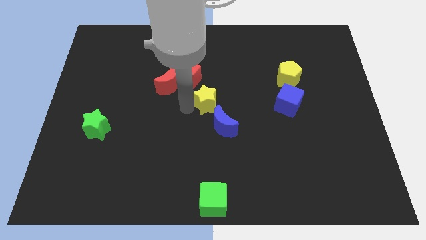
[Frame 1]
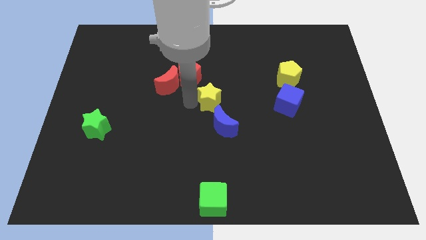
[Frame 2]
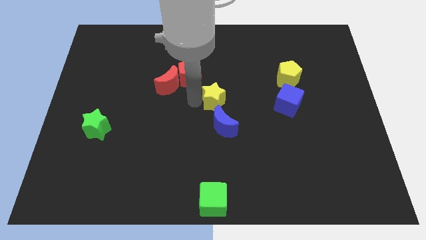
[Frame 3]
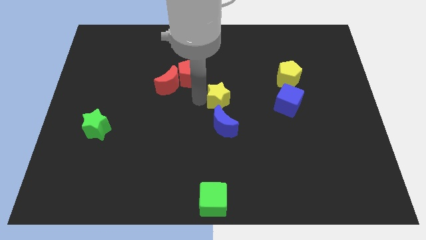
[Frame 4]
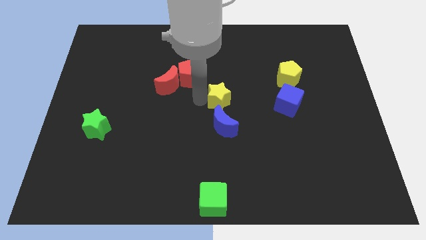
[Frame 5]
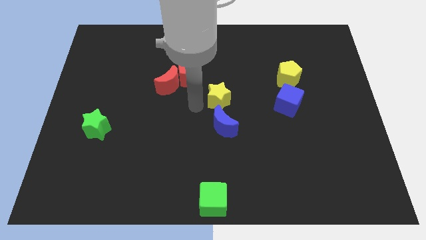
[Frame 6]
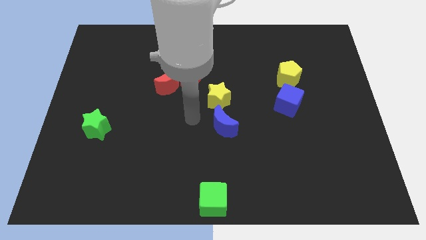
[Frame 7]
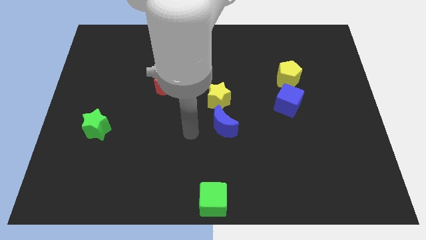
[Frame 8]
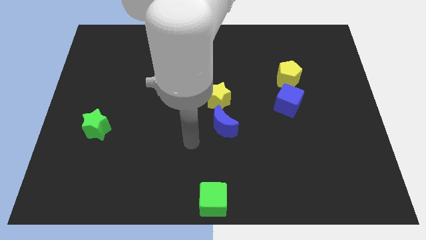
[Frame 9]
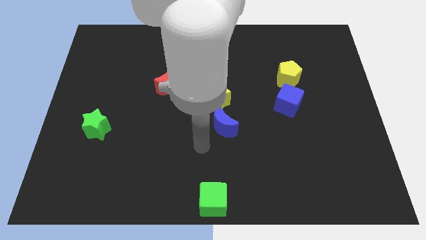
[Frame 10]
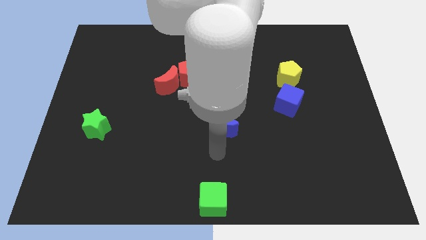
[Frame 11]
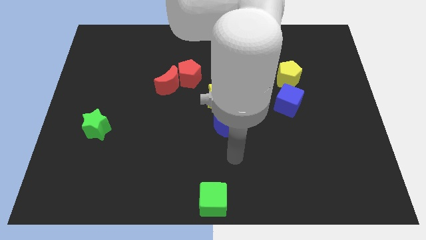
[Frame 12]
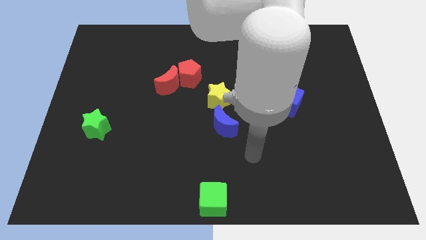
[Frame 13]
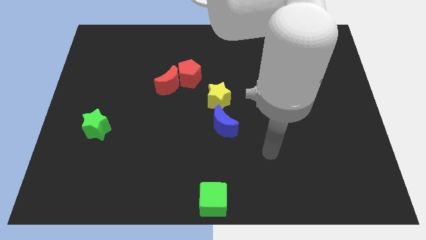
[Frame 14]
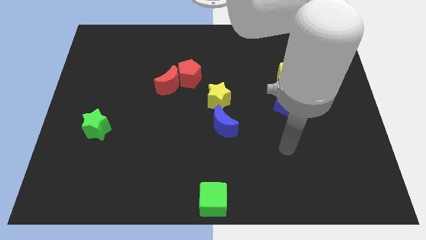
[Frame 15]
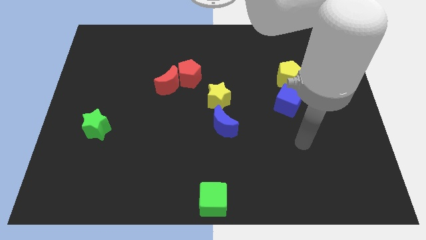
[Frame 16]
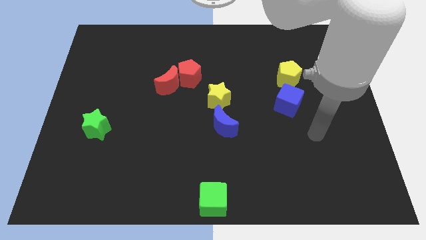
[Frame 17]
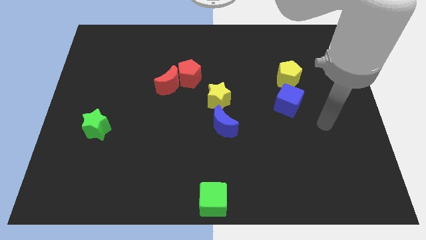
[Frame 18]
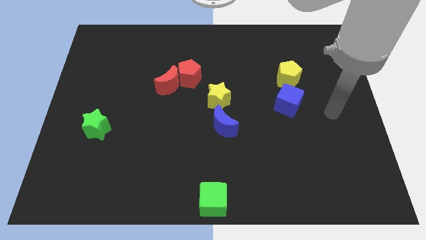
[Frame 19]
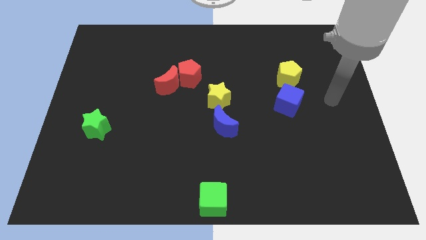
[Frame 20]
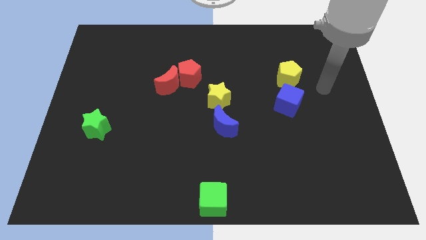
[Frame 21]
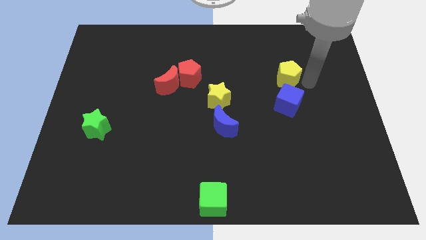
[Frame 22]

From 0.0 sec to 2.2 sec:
move the yellow star at the top of the blue moon

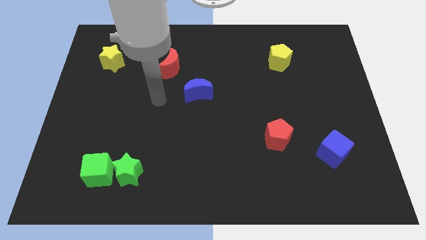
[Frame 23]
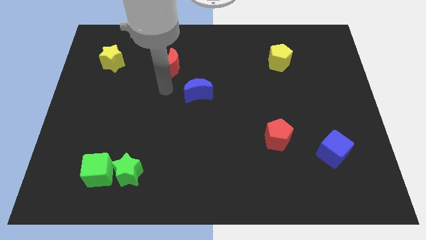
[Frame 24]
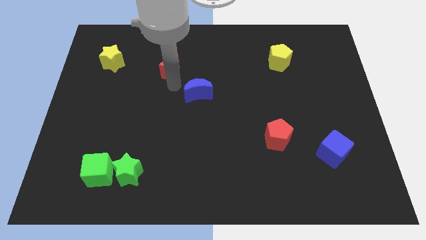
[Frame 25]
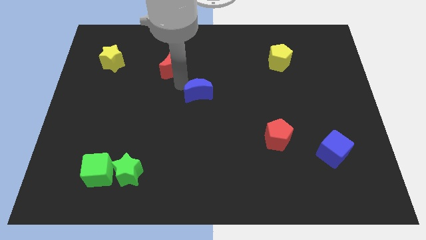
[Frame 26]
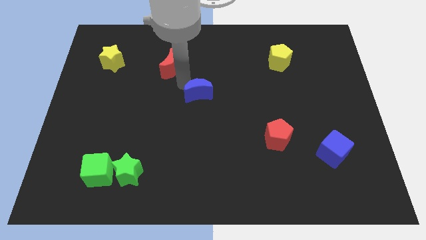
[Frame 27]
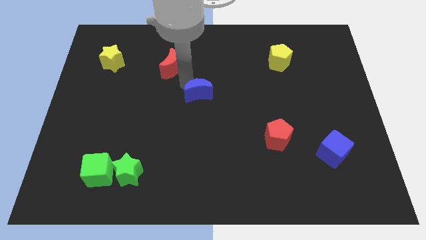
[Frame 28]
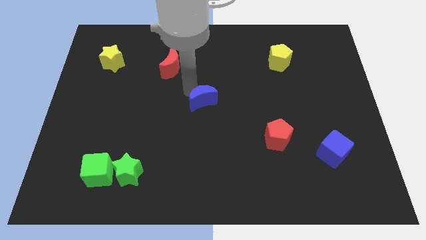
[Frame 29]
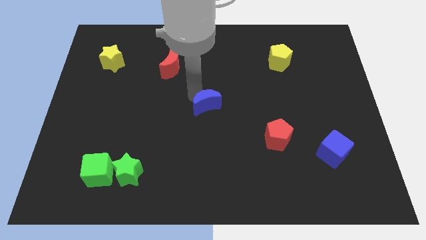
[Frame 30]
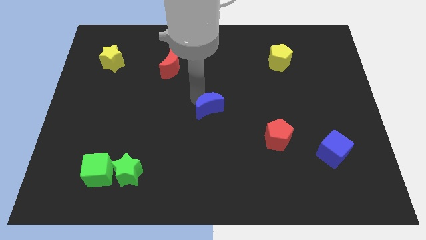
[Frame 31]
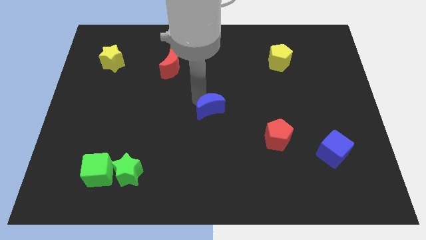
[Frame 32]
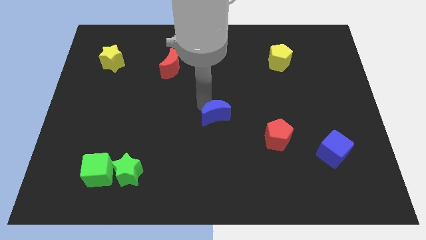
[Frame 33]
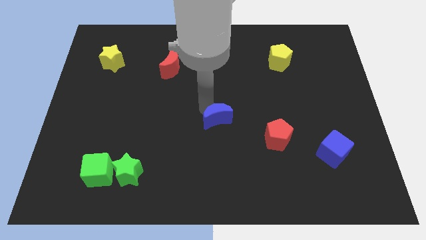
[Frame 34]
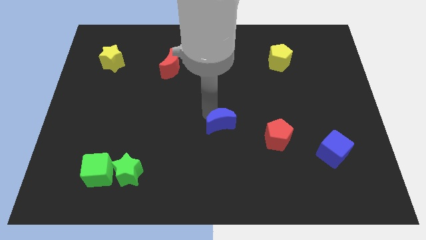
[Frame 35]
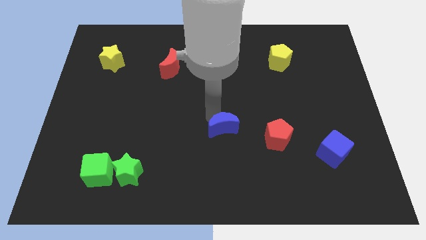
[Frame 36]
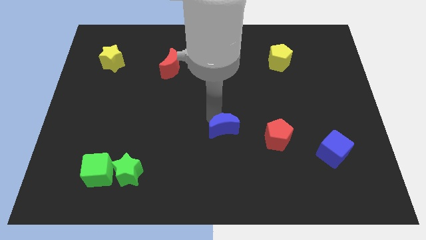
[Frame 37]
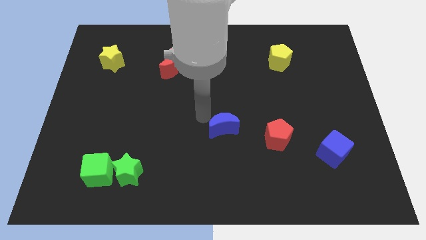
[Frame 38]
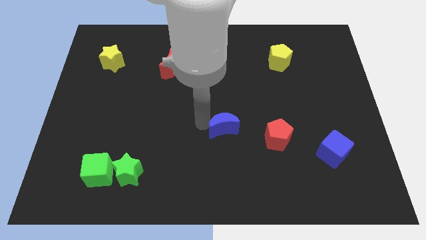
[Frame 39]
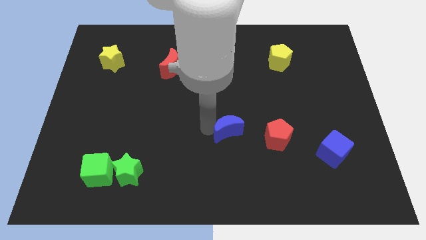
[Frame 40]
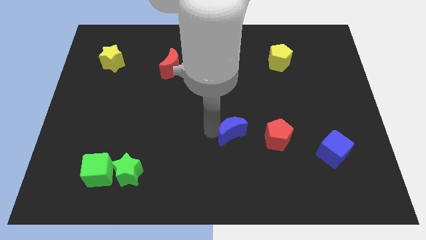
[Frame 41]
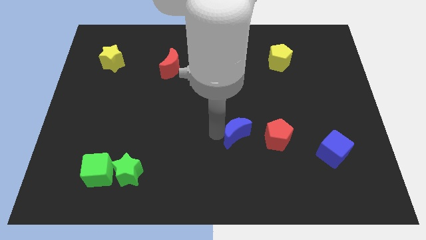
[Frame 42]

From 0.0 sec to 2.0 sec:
place the blue moon left to the red pentagon

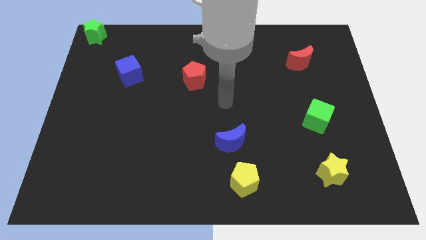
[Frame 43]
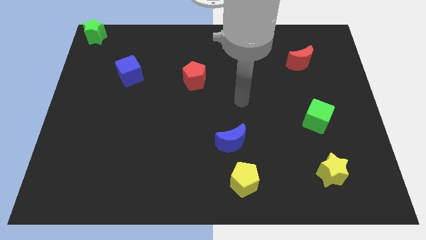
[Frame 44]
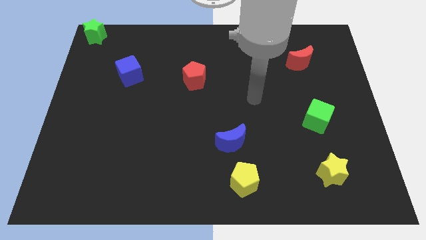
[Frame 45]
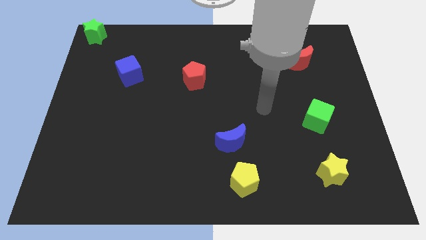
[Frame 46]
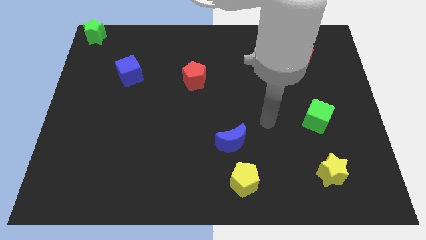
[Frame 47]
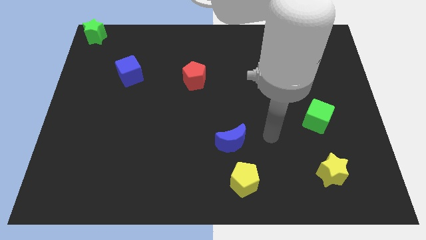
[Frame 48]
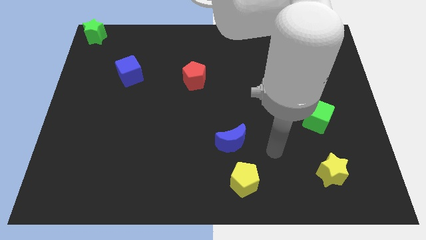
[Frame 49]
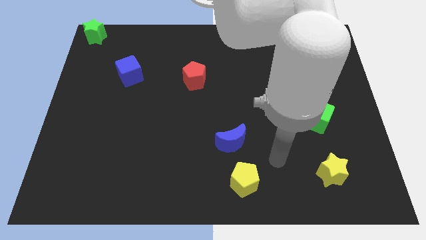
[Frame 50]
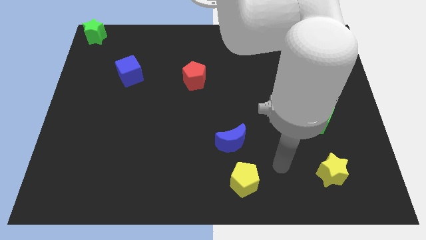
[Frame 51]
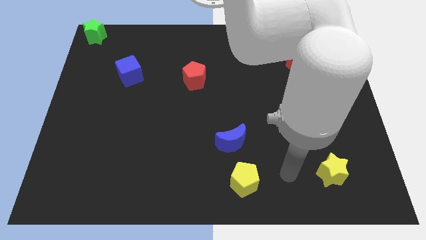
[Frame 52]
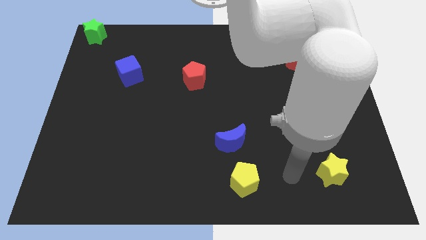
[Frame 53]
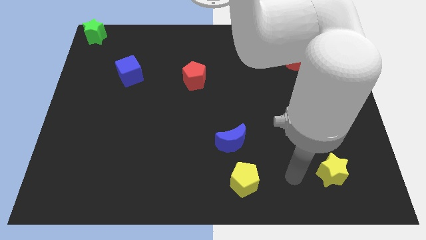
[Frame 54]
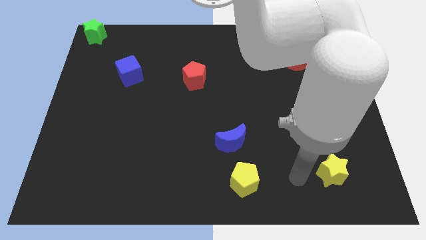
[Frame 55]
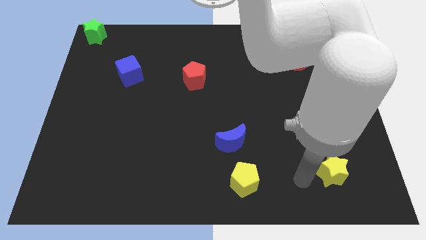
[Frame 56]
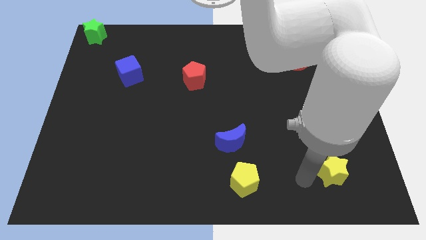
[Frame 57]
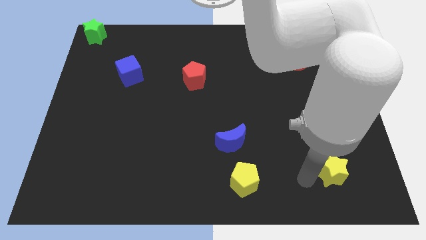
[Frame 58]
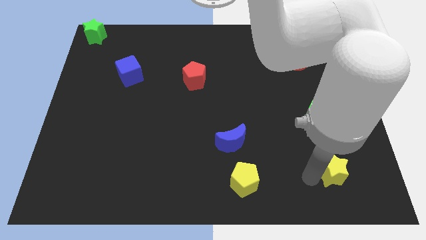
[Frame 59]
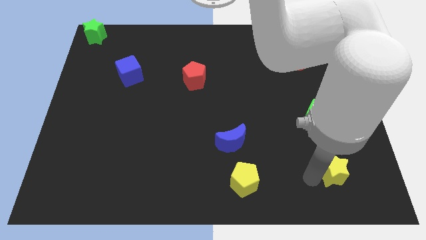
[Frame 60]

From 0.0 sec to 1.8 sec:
touch the left side of the yellow star

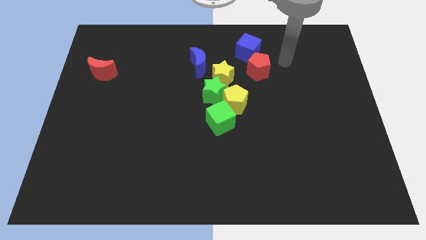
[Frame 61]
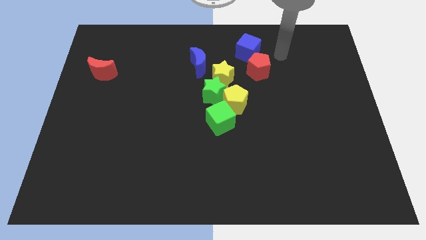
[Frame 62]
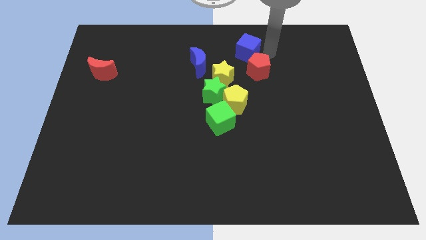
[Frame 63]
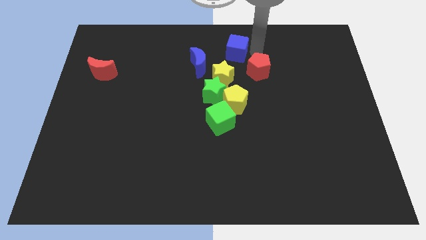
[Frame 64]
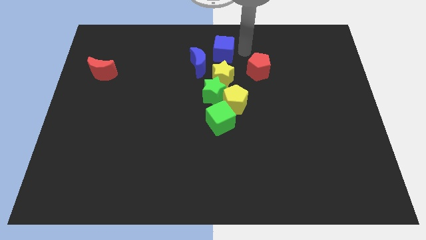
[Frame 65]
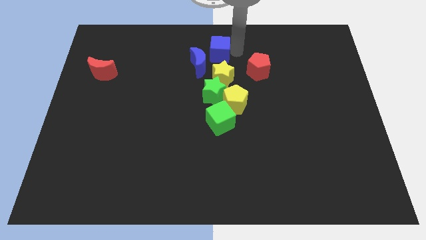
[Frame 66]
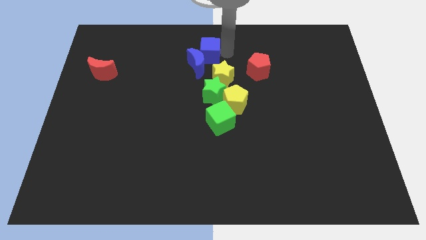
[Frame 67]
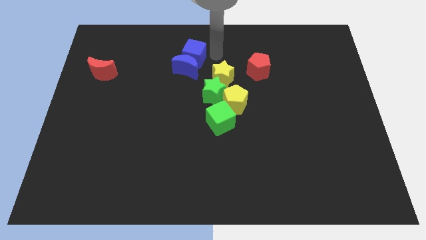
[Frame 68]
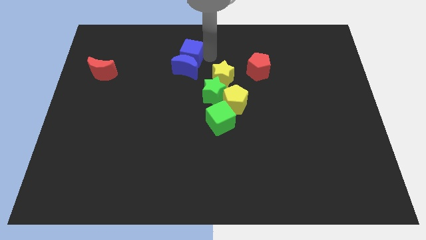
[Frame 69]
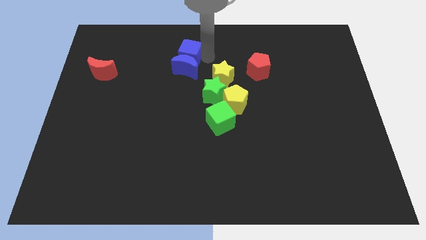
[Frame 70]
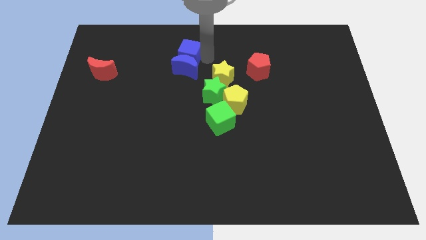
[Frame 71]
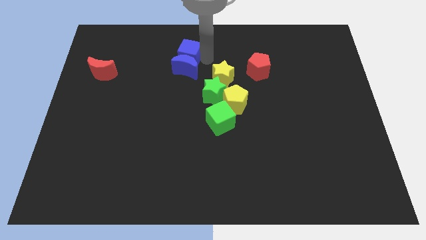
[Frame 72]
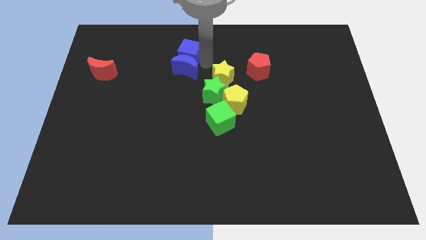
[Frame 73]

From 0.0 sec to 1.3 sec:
move the blue cube to the top of the blue moon

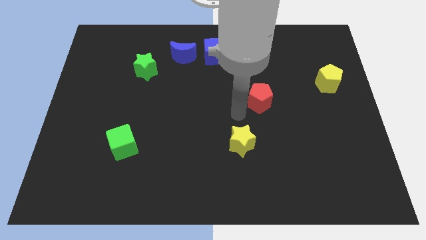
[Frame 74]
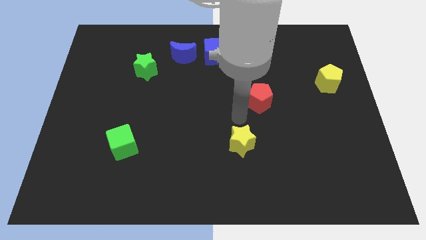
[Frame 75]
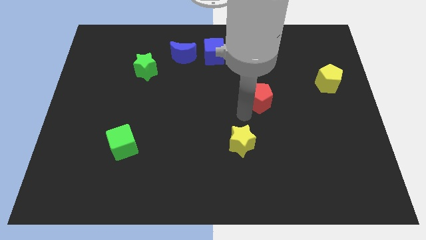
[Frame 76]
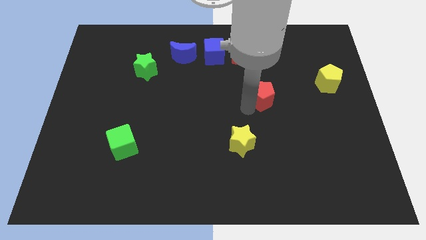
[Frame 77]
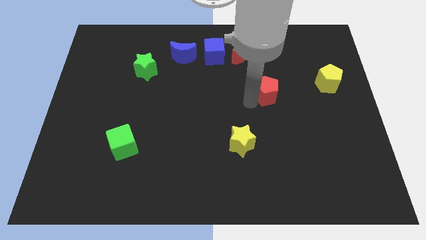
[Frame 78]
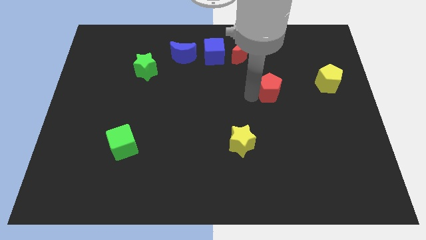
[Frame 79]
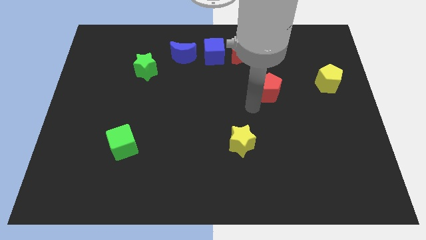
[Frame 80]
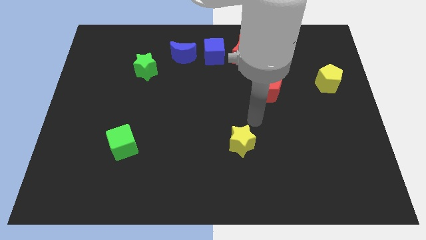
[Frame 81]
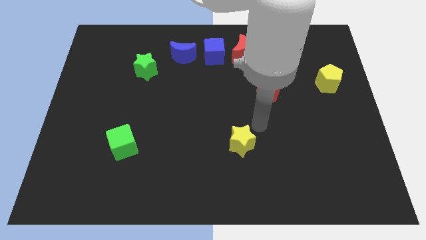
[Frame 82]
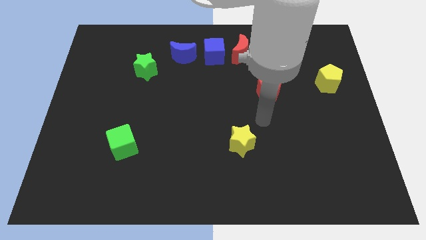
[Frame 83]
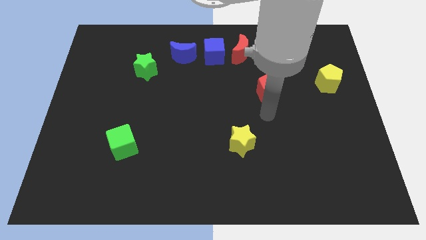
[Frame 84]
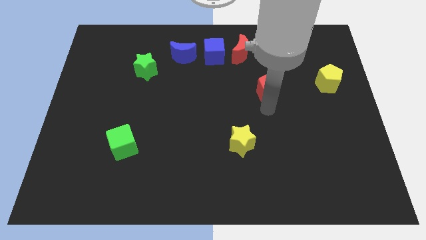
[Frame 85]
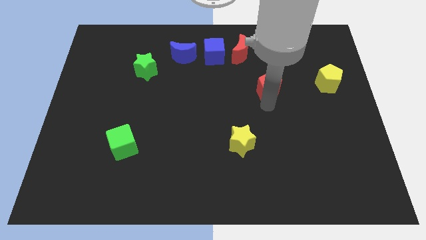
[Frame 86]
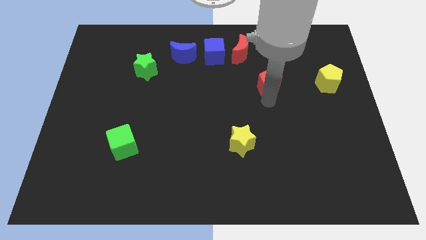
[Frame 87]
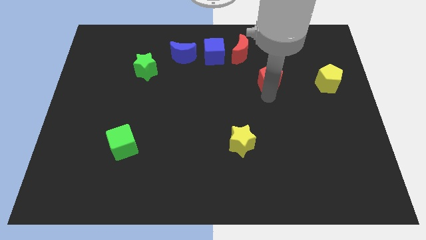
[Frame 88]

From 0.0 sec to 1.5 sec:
place the red pentagon horizontally left to the yellow pentagon
